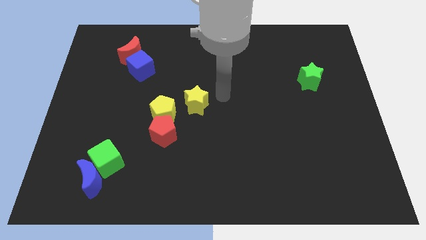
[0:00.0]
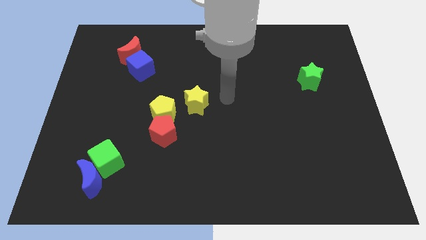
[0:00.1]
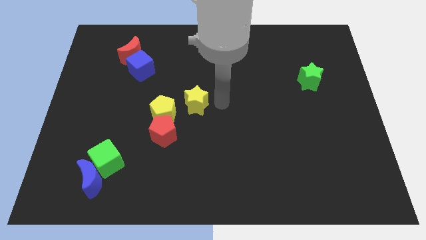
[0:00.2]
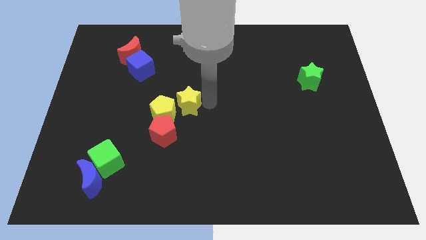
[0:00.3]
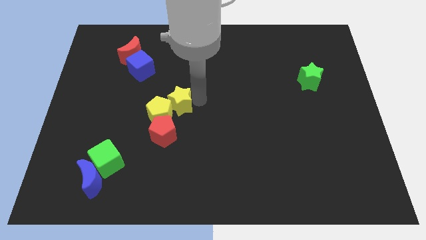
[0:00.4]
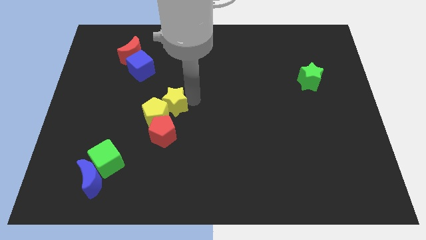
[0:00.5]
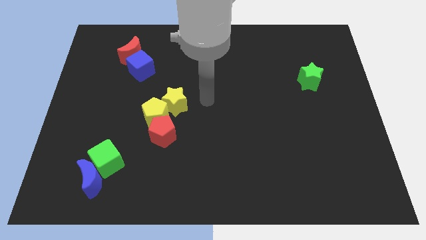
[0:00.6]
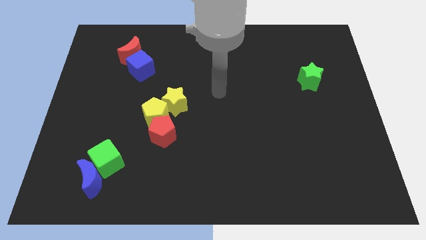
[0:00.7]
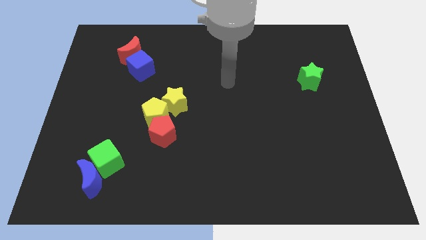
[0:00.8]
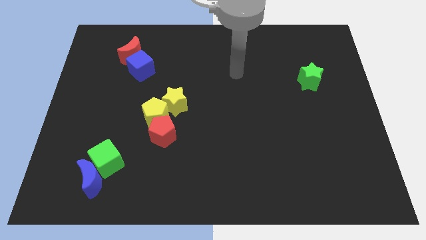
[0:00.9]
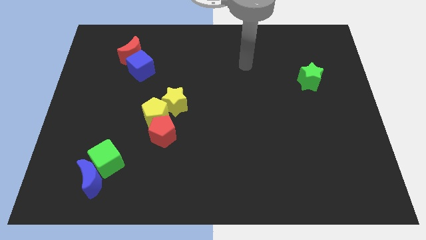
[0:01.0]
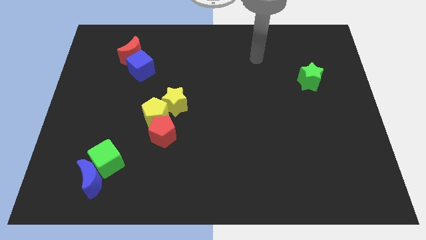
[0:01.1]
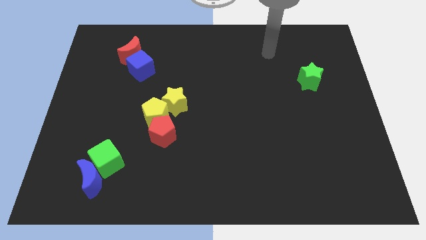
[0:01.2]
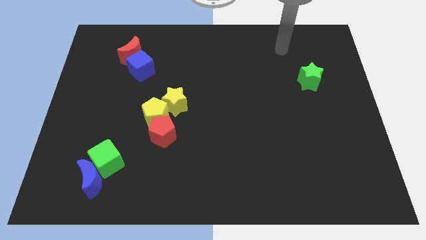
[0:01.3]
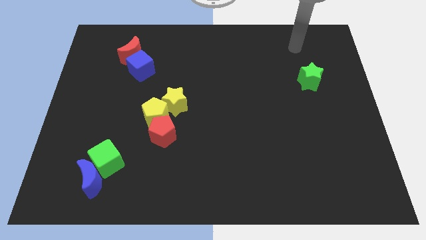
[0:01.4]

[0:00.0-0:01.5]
push the yellow pentagon and red pentagon with the yellow star towards the left center of the board

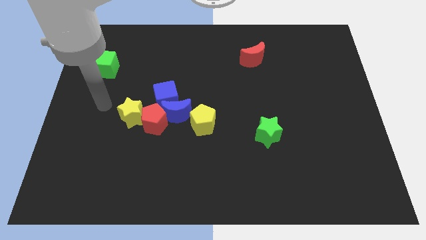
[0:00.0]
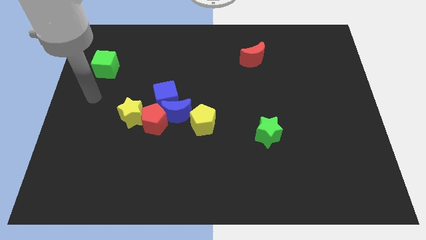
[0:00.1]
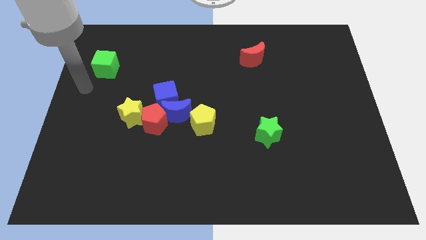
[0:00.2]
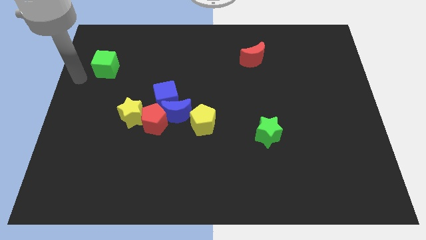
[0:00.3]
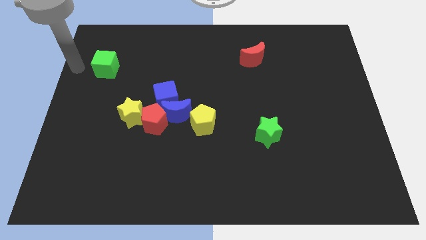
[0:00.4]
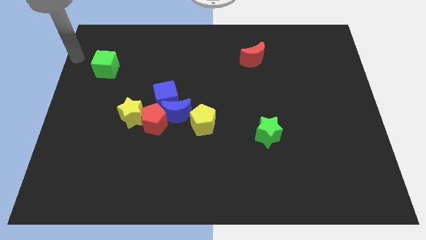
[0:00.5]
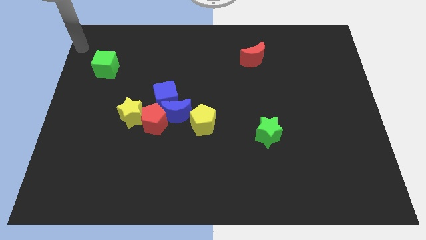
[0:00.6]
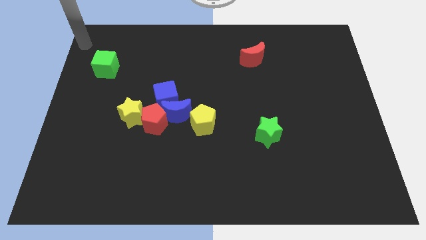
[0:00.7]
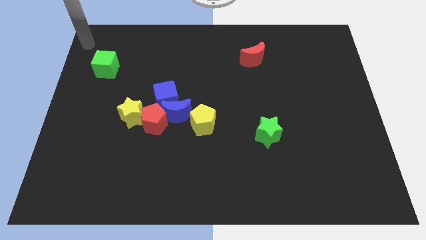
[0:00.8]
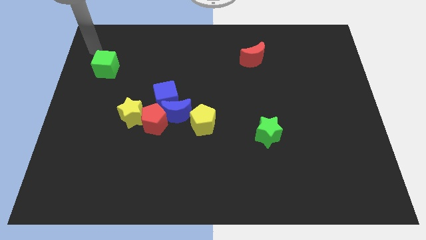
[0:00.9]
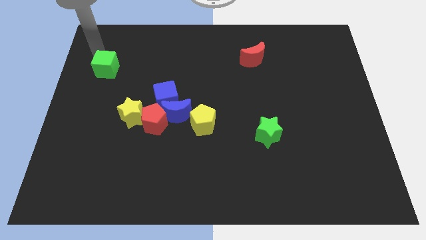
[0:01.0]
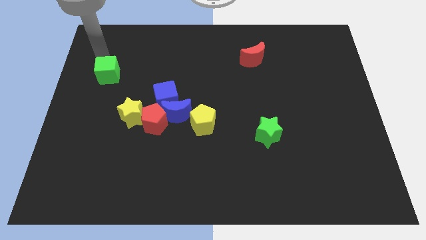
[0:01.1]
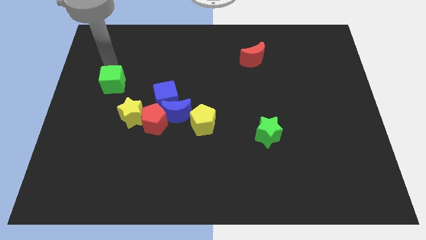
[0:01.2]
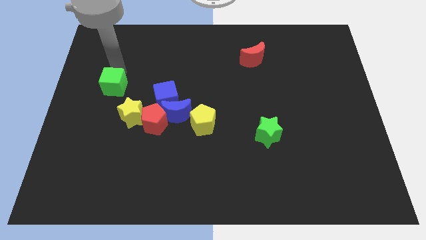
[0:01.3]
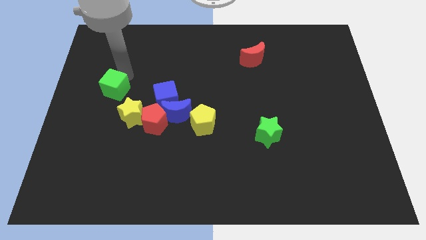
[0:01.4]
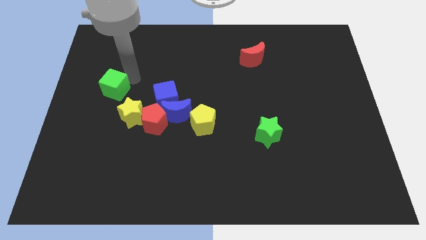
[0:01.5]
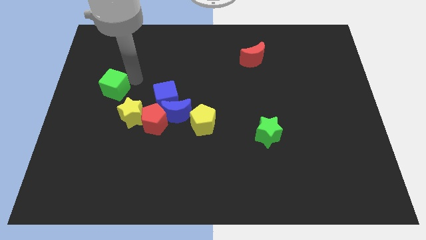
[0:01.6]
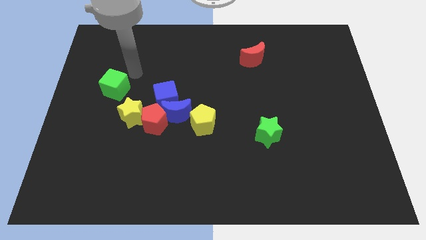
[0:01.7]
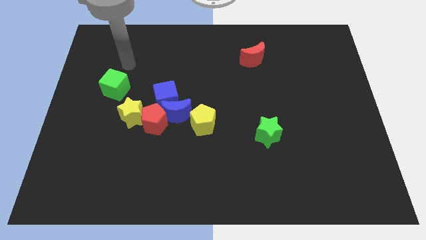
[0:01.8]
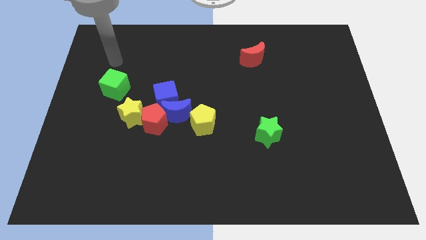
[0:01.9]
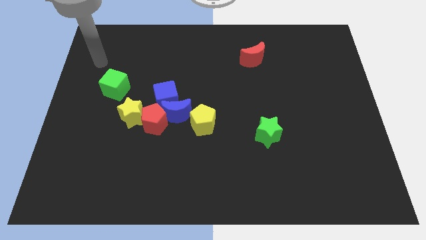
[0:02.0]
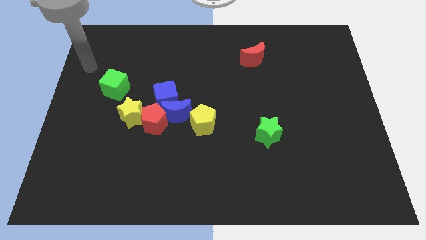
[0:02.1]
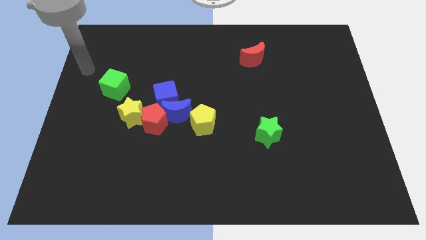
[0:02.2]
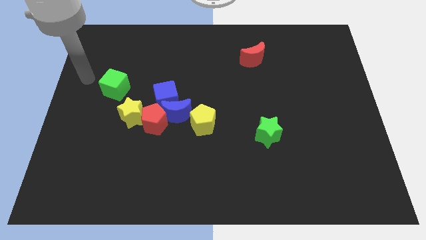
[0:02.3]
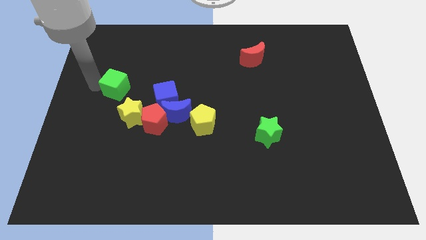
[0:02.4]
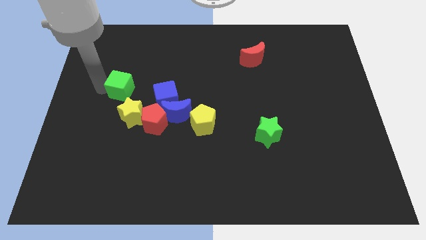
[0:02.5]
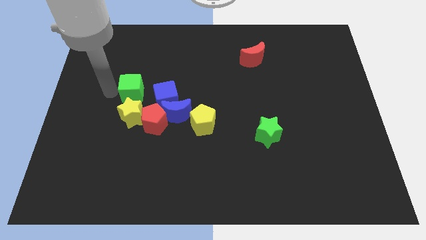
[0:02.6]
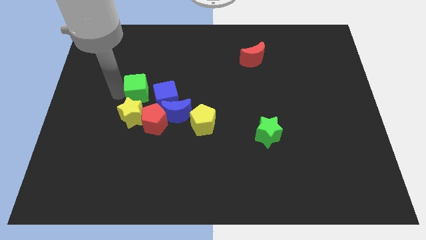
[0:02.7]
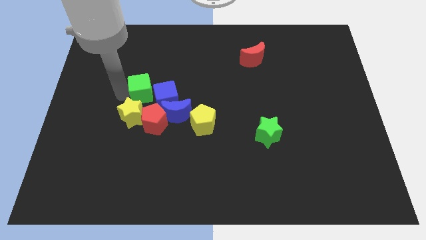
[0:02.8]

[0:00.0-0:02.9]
push the green cube to the top of the yellow pentagon

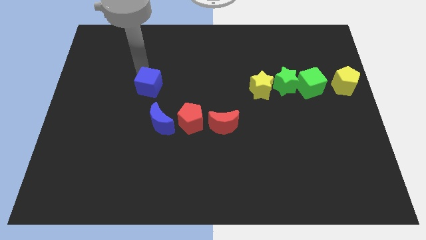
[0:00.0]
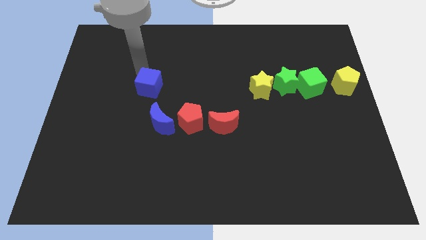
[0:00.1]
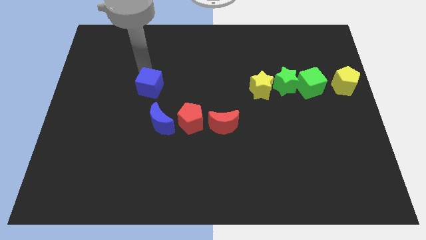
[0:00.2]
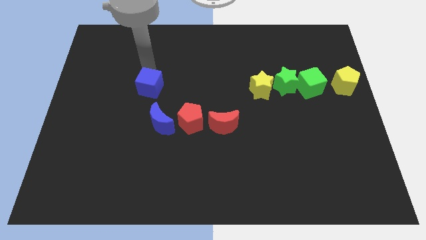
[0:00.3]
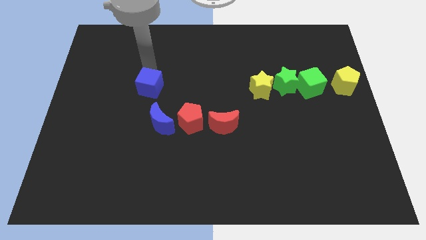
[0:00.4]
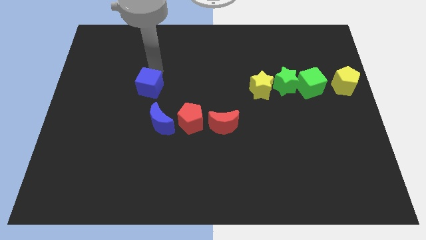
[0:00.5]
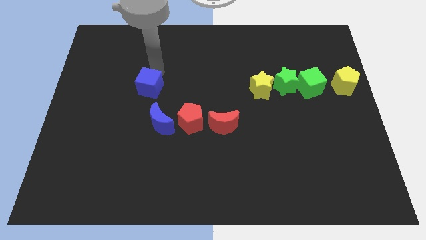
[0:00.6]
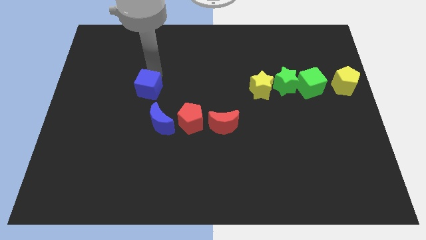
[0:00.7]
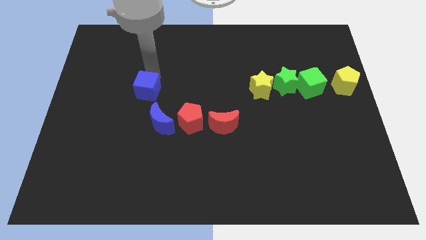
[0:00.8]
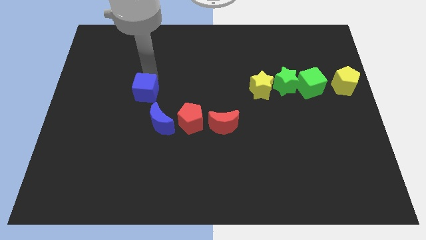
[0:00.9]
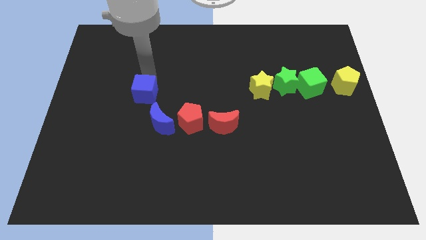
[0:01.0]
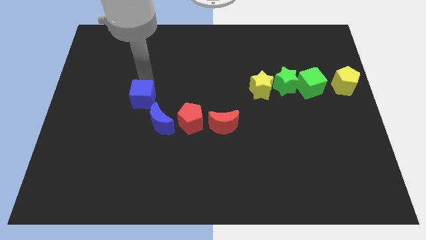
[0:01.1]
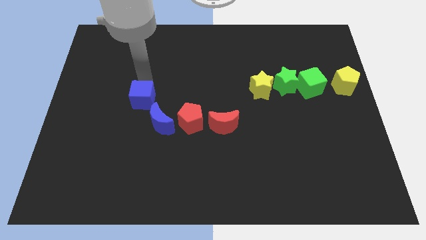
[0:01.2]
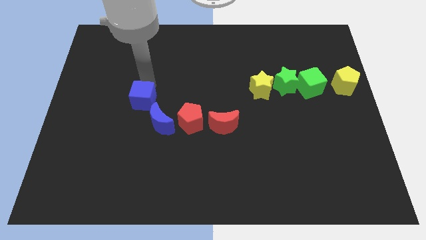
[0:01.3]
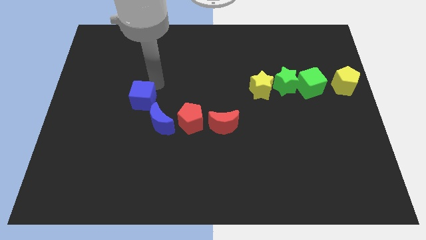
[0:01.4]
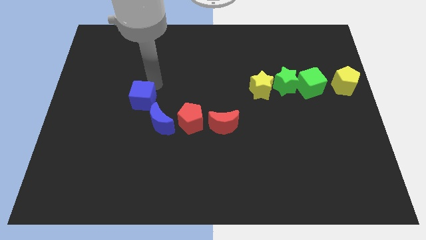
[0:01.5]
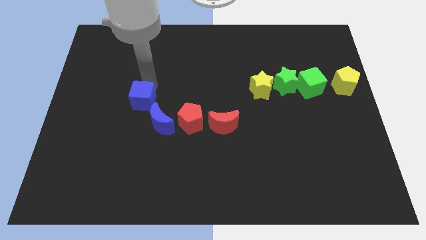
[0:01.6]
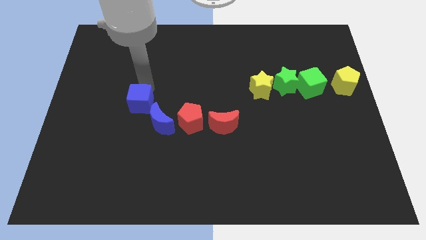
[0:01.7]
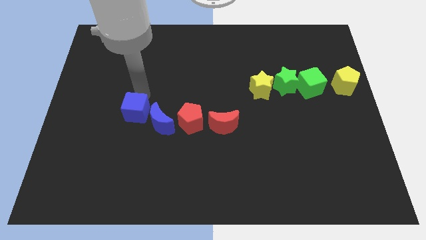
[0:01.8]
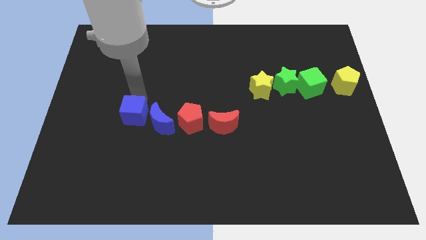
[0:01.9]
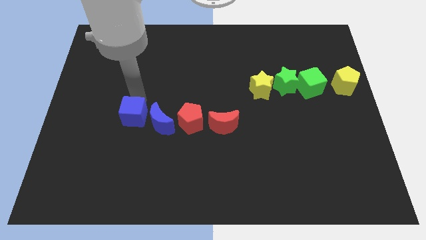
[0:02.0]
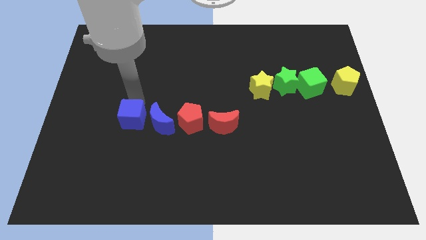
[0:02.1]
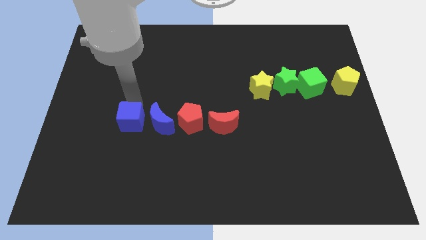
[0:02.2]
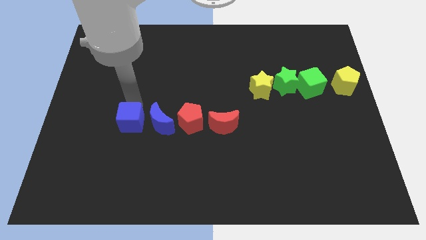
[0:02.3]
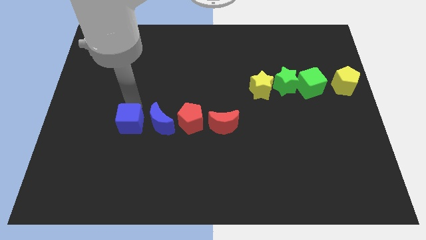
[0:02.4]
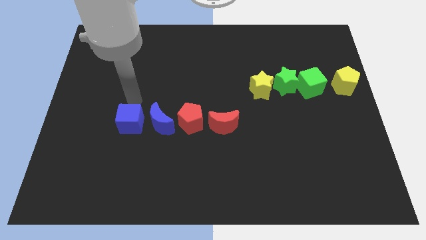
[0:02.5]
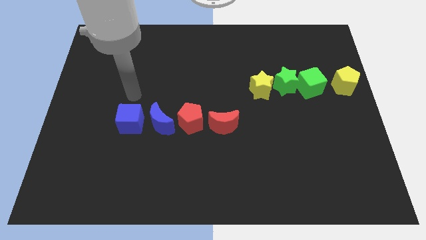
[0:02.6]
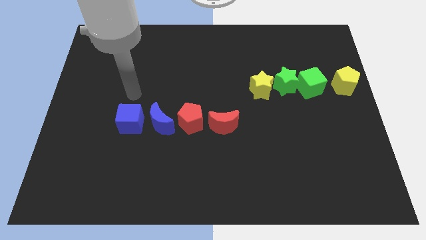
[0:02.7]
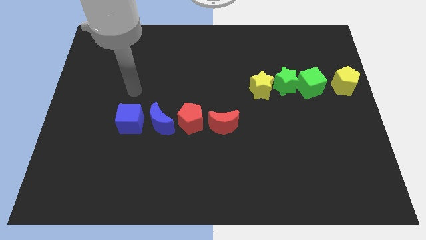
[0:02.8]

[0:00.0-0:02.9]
push the blue cube left to the blue moon

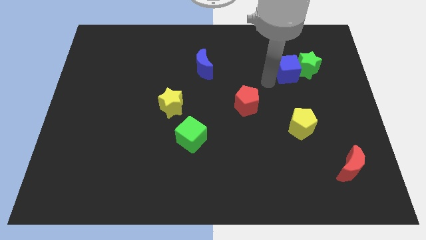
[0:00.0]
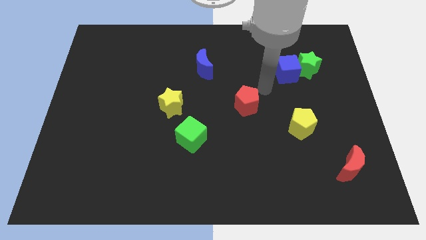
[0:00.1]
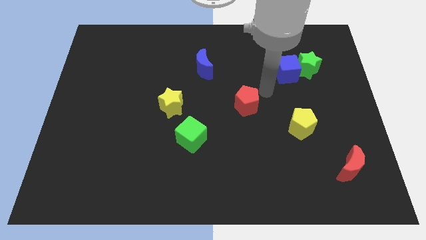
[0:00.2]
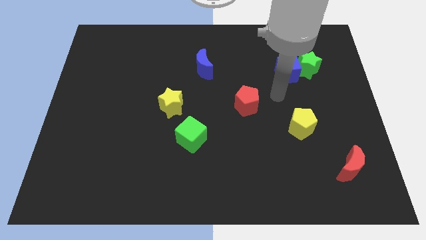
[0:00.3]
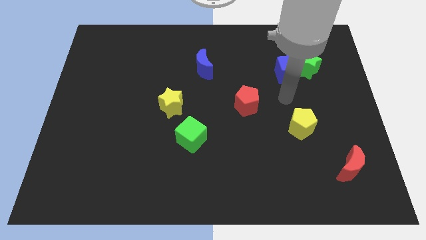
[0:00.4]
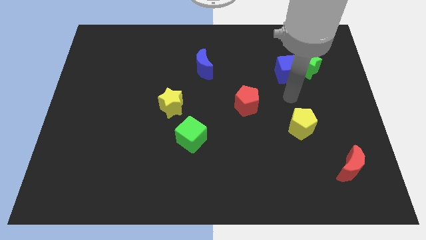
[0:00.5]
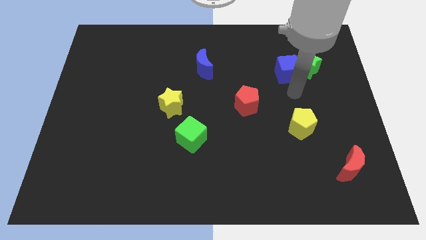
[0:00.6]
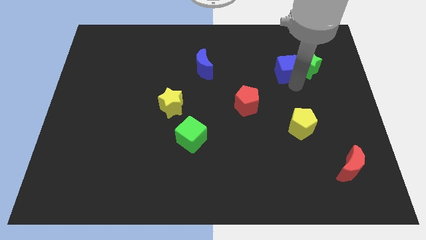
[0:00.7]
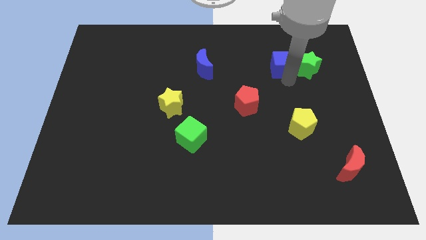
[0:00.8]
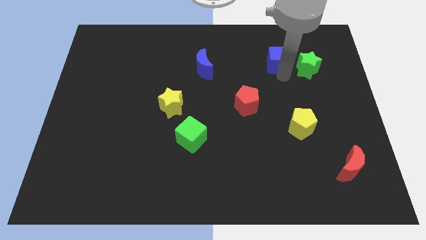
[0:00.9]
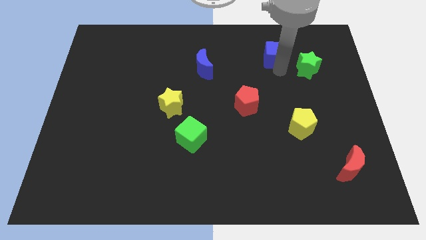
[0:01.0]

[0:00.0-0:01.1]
place the blue cube in between the green star and blue moon

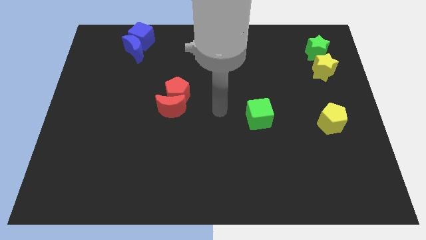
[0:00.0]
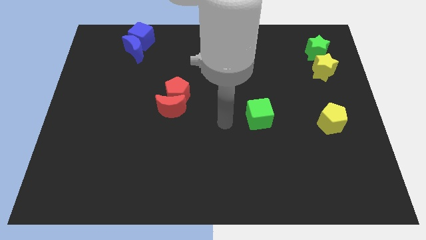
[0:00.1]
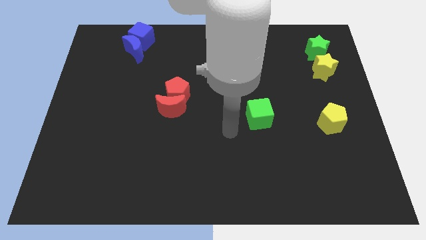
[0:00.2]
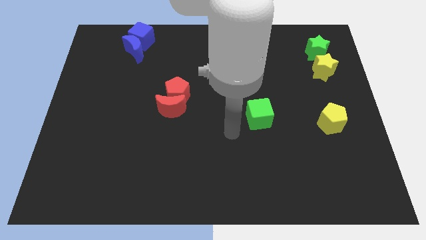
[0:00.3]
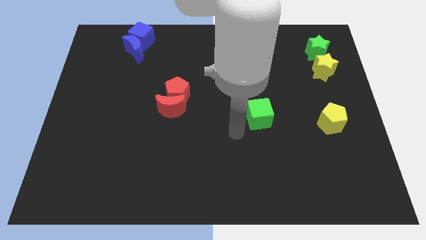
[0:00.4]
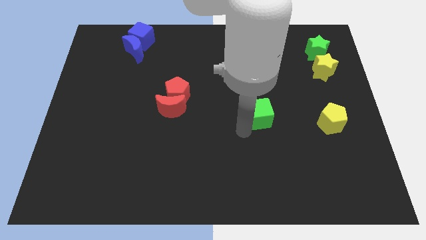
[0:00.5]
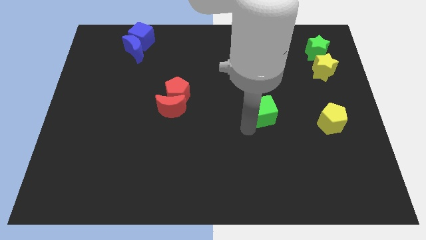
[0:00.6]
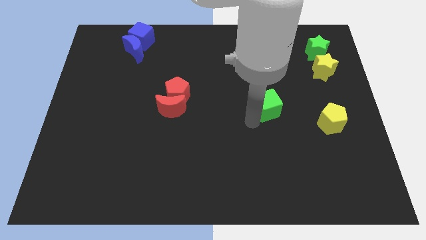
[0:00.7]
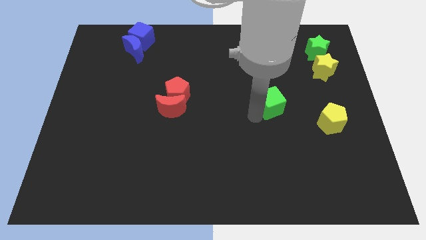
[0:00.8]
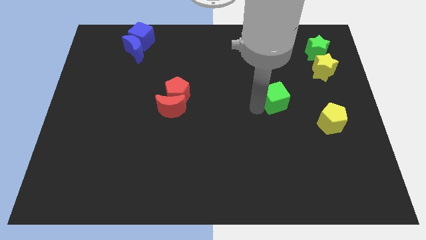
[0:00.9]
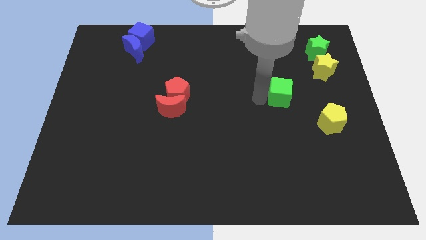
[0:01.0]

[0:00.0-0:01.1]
move the green cube towards yellow pwntagon
